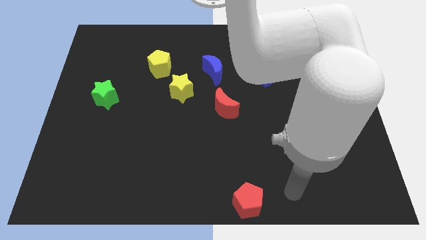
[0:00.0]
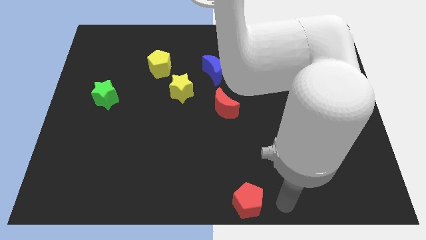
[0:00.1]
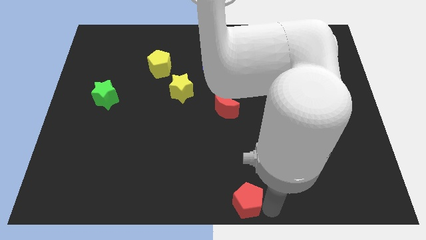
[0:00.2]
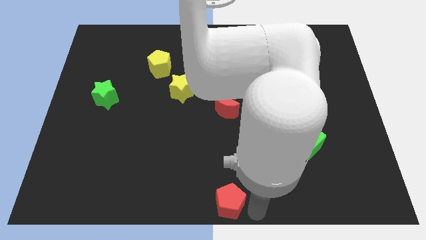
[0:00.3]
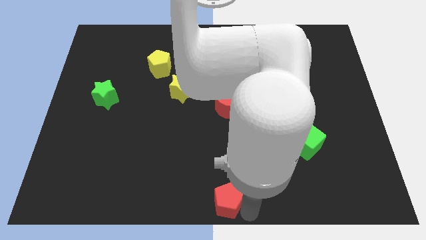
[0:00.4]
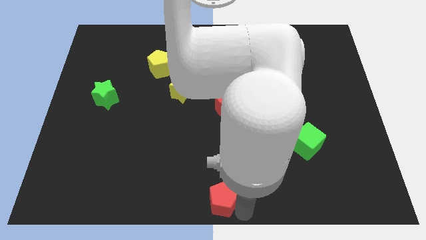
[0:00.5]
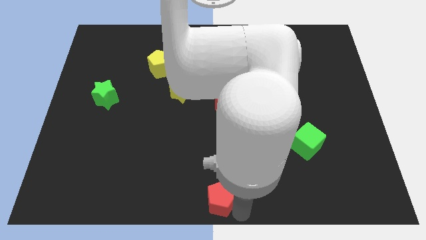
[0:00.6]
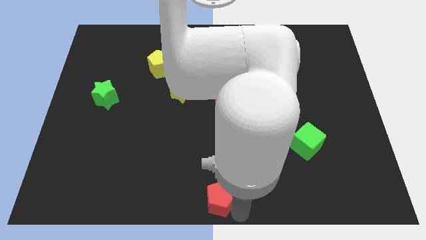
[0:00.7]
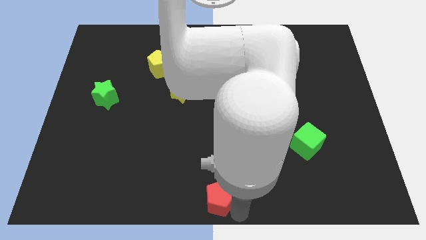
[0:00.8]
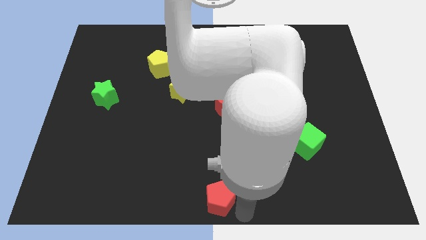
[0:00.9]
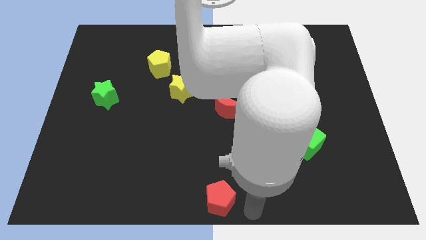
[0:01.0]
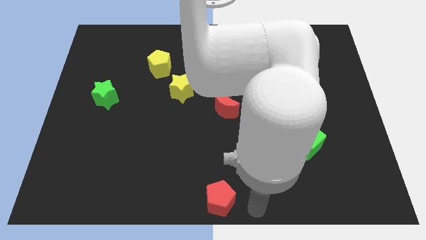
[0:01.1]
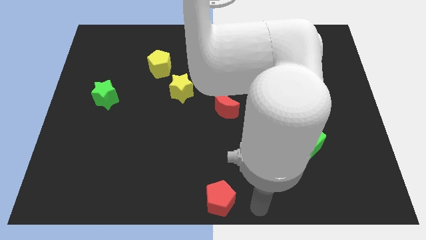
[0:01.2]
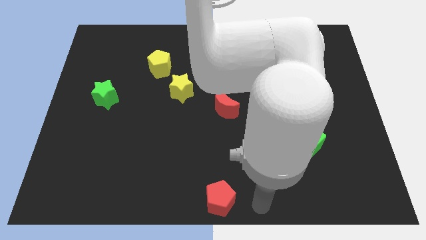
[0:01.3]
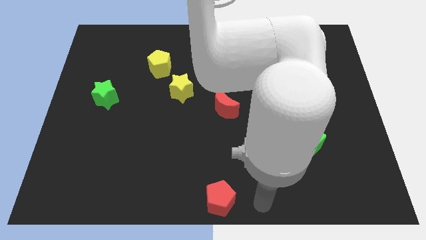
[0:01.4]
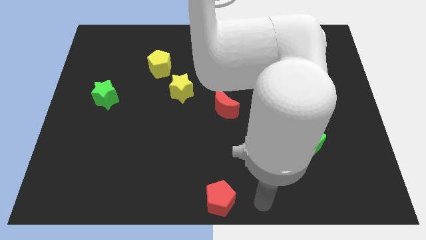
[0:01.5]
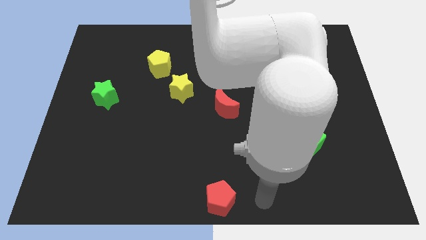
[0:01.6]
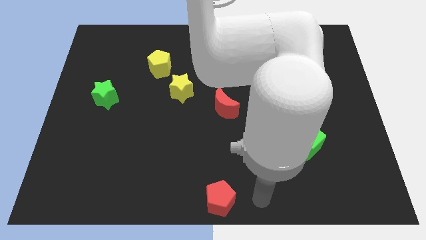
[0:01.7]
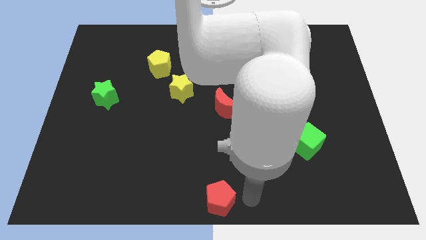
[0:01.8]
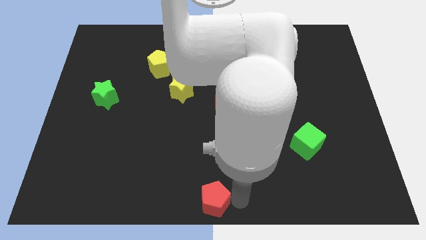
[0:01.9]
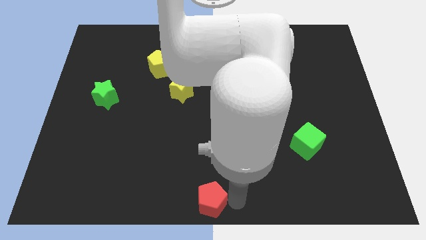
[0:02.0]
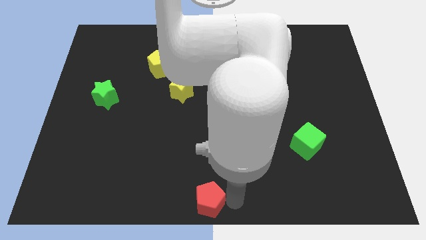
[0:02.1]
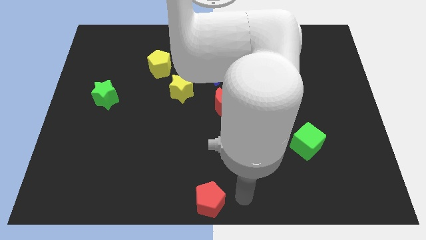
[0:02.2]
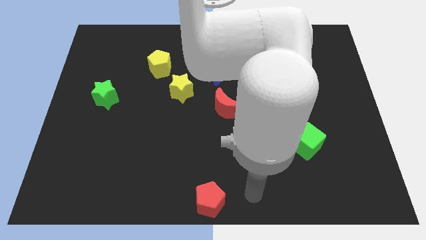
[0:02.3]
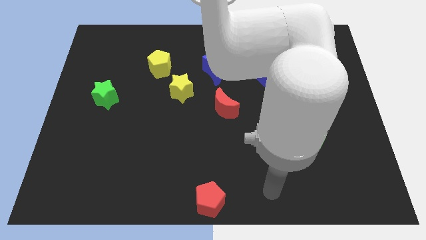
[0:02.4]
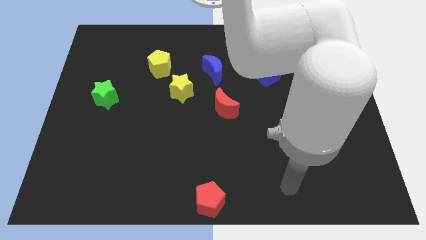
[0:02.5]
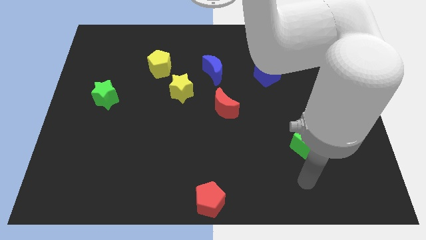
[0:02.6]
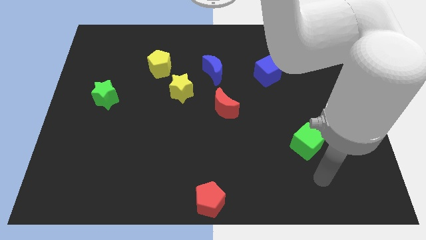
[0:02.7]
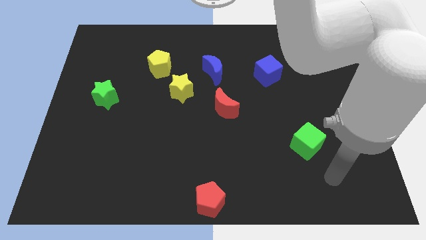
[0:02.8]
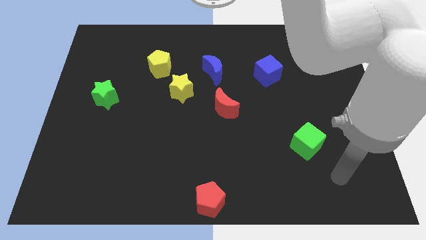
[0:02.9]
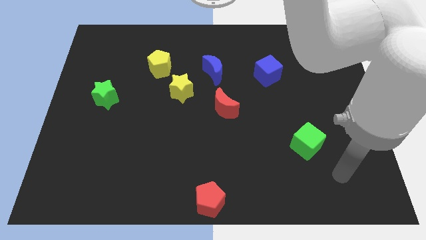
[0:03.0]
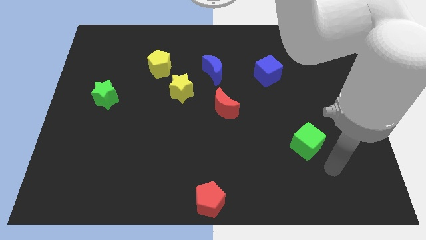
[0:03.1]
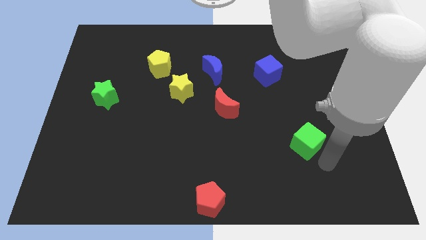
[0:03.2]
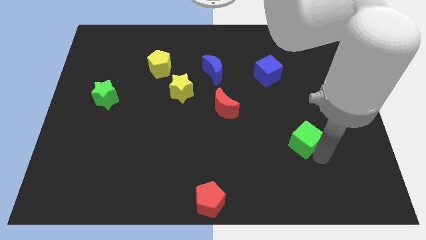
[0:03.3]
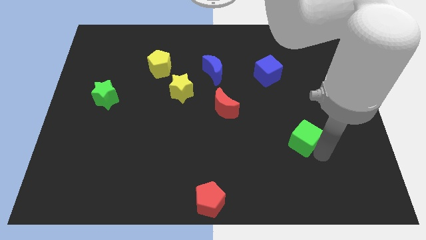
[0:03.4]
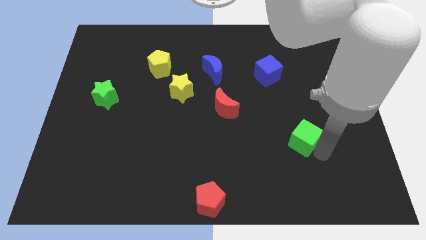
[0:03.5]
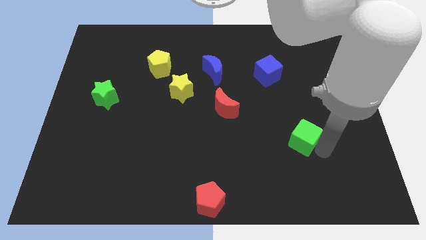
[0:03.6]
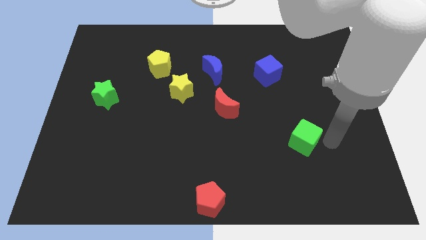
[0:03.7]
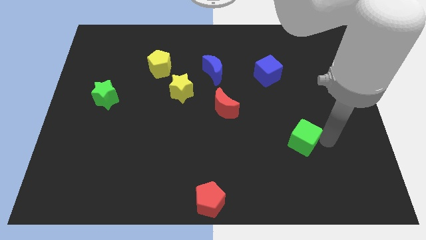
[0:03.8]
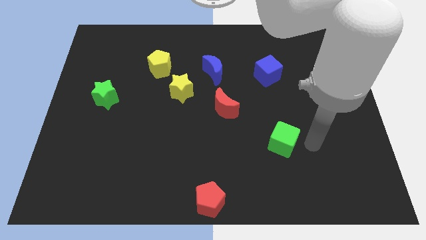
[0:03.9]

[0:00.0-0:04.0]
place the green cube diagonally to the red crescent

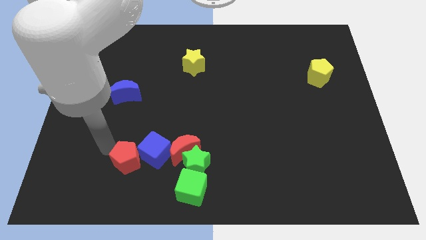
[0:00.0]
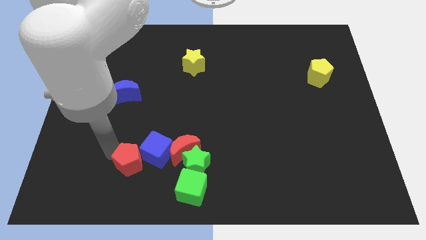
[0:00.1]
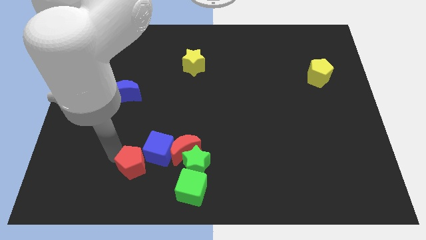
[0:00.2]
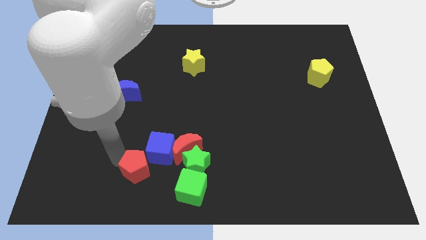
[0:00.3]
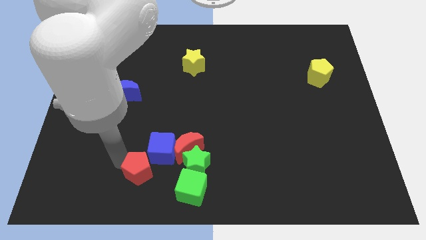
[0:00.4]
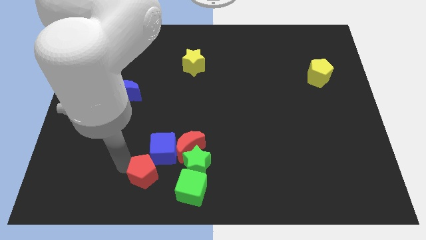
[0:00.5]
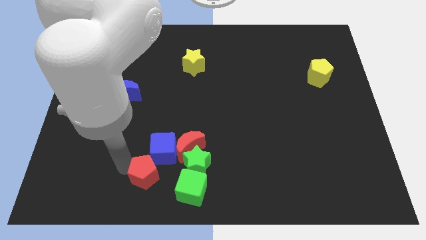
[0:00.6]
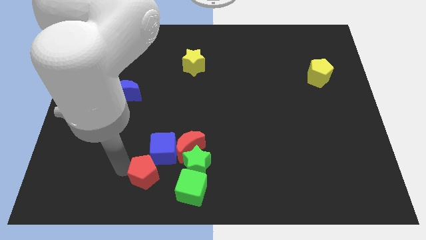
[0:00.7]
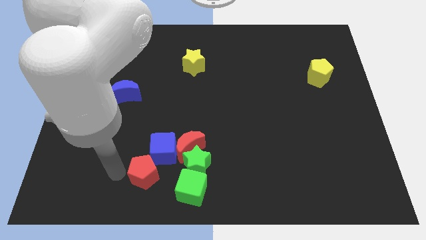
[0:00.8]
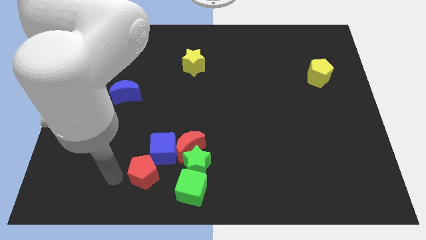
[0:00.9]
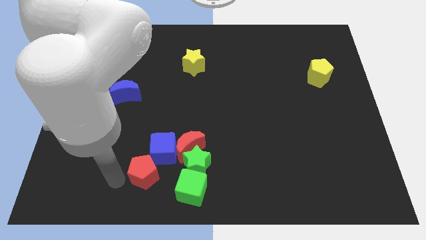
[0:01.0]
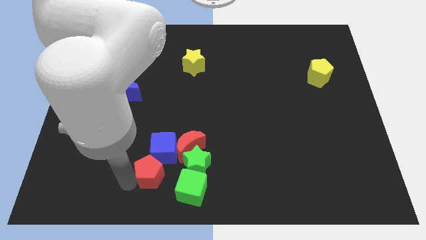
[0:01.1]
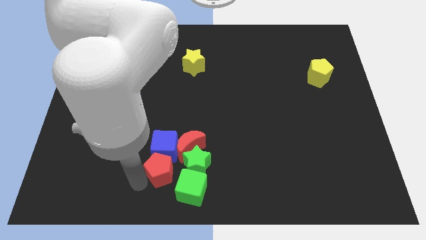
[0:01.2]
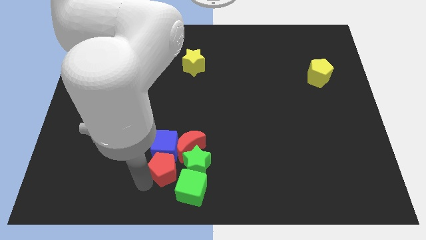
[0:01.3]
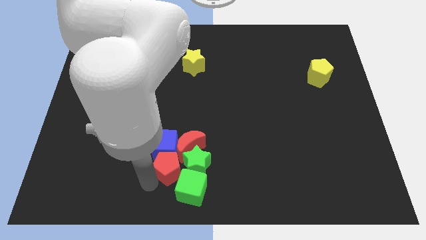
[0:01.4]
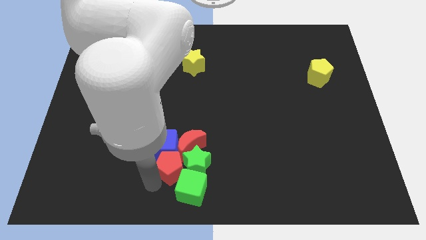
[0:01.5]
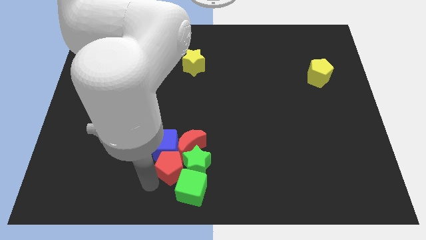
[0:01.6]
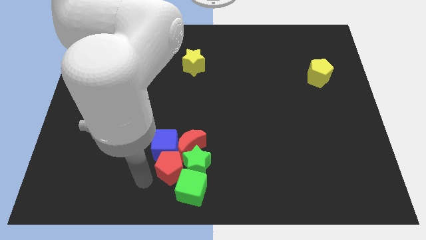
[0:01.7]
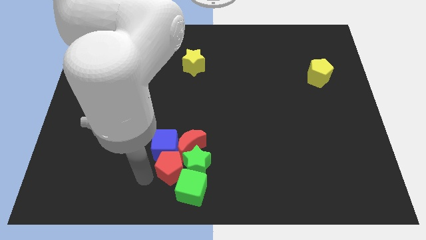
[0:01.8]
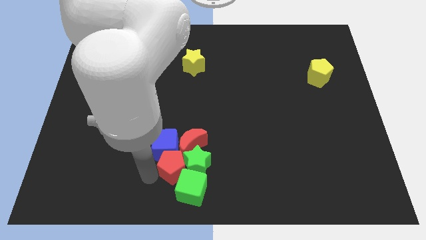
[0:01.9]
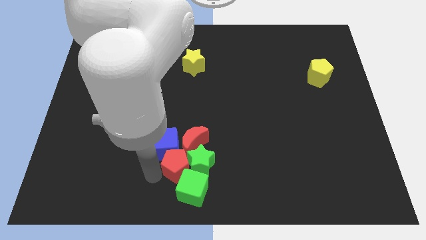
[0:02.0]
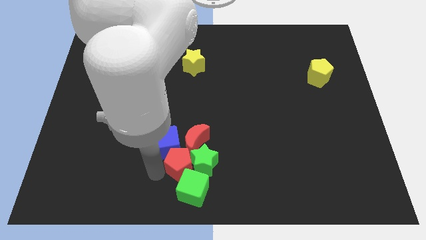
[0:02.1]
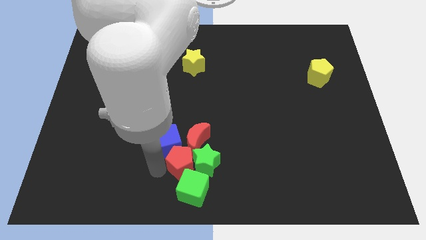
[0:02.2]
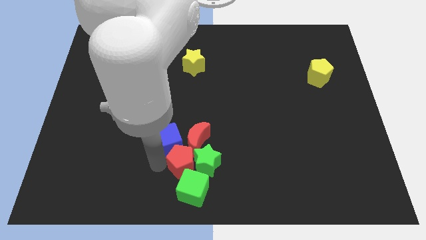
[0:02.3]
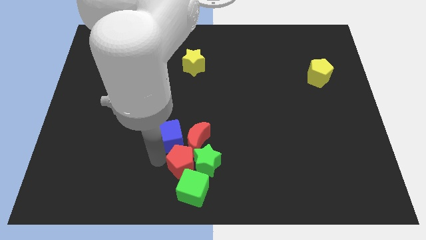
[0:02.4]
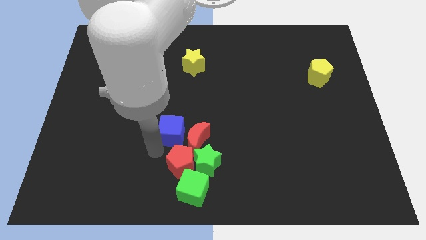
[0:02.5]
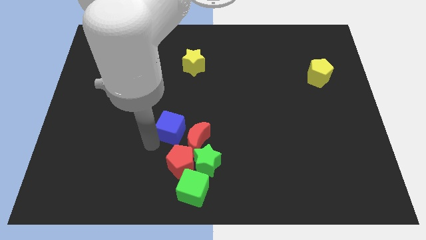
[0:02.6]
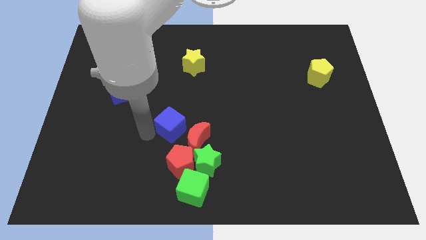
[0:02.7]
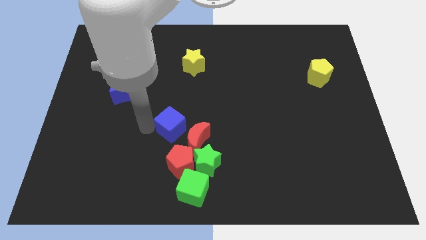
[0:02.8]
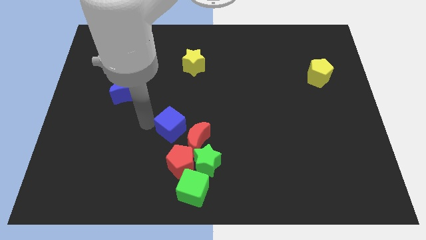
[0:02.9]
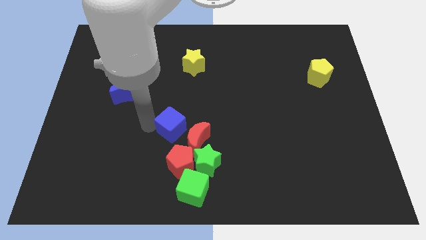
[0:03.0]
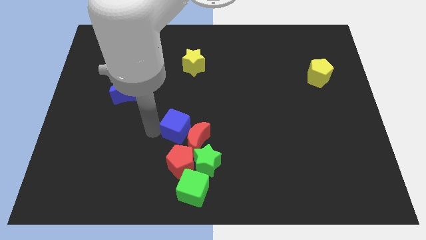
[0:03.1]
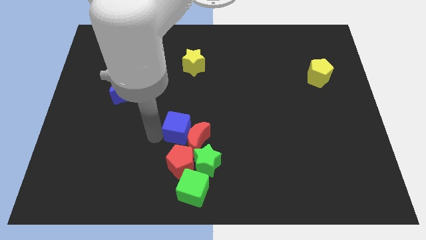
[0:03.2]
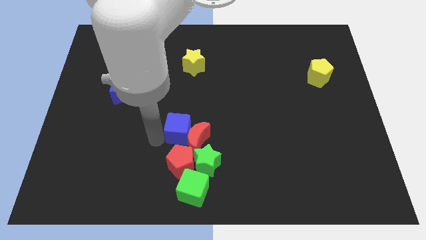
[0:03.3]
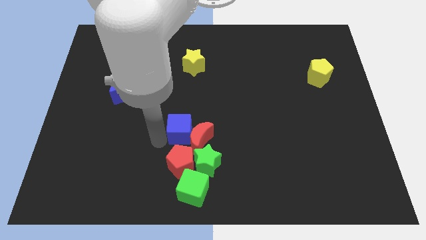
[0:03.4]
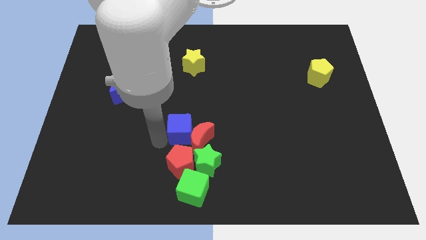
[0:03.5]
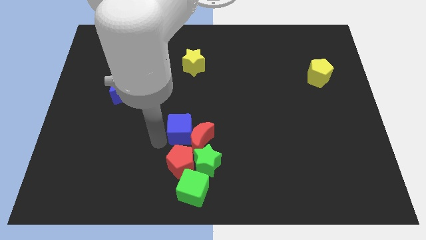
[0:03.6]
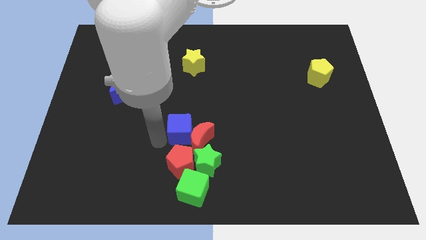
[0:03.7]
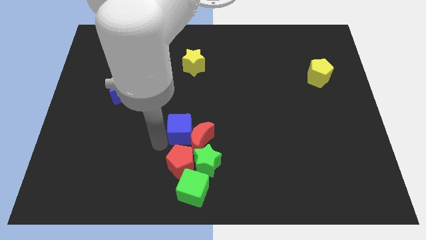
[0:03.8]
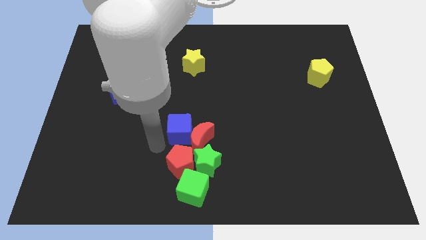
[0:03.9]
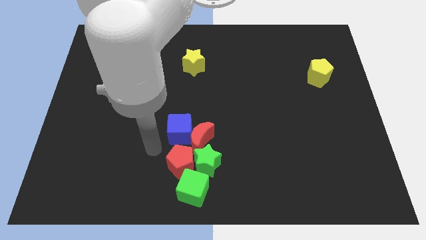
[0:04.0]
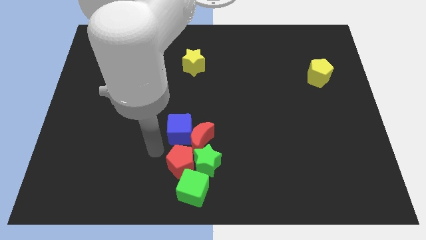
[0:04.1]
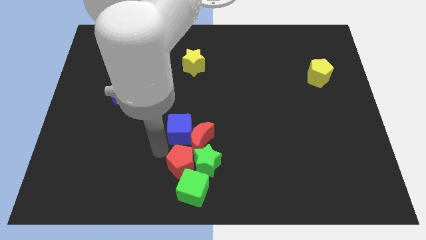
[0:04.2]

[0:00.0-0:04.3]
place the red pentagon to the left side of the green star

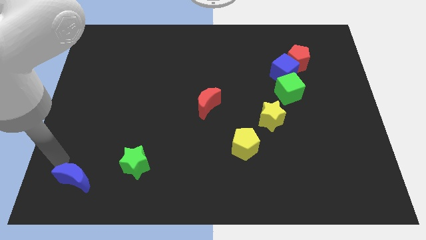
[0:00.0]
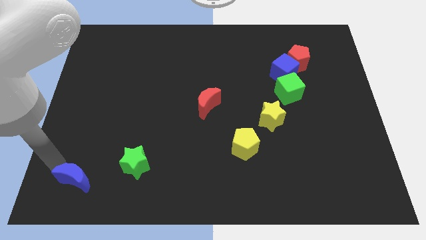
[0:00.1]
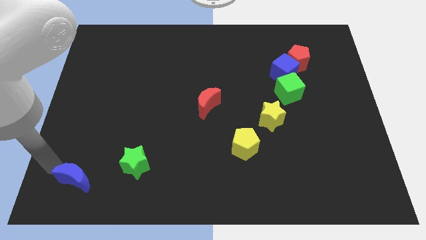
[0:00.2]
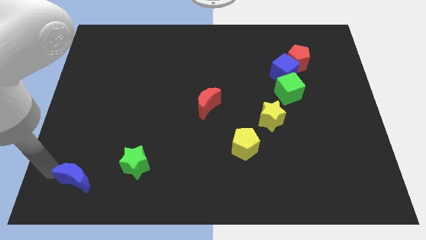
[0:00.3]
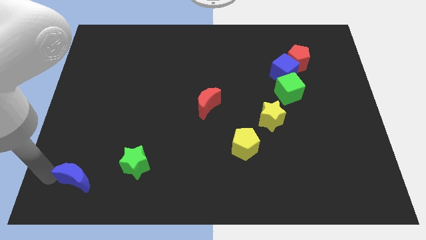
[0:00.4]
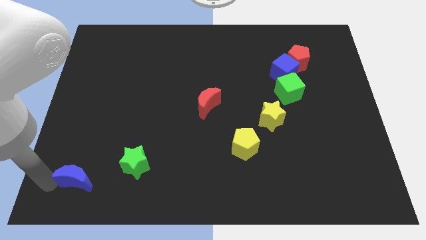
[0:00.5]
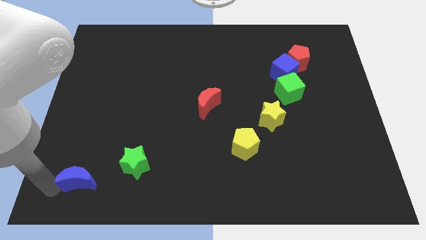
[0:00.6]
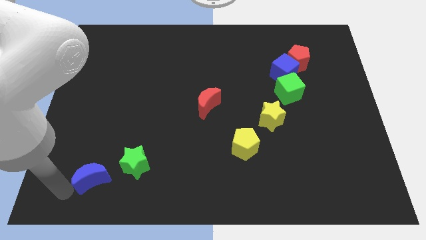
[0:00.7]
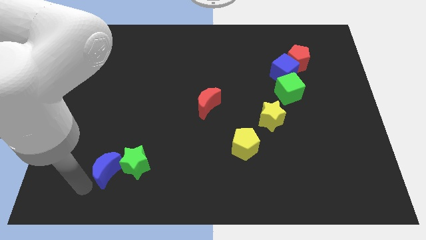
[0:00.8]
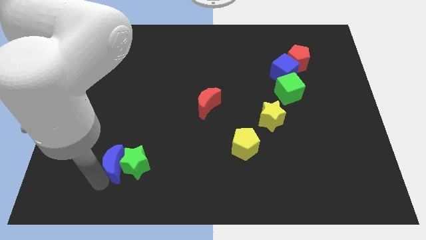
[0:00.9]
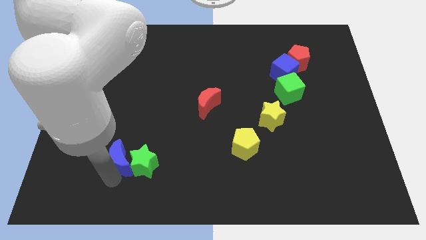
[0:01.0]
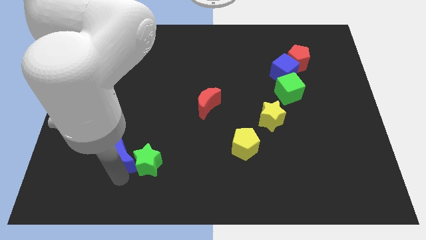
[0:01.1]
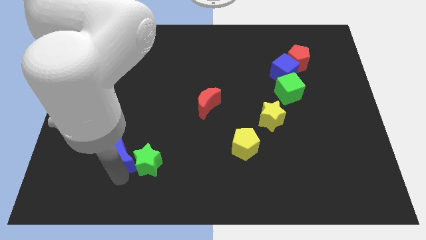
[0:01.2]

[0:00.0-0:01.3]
move the blue crescent into the green star
